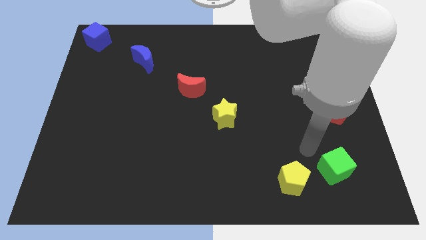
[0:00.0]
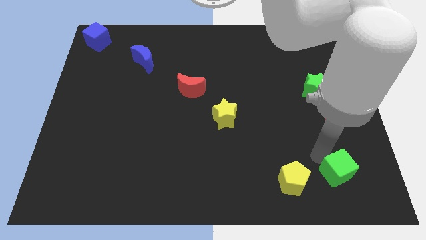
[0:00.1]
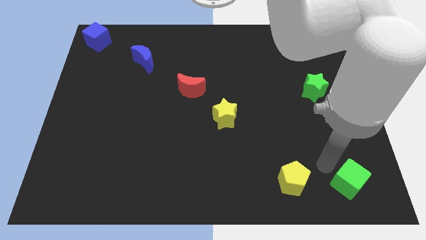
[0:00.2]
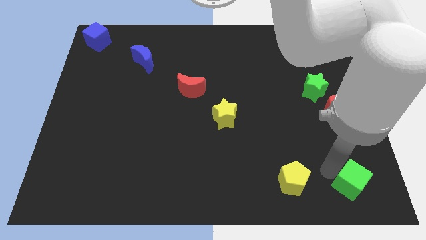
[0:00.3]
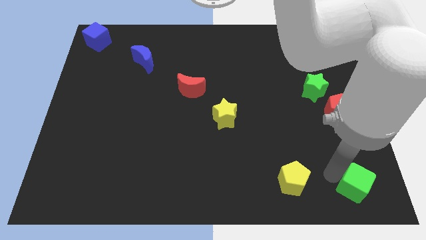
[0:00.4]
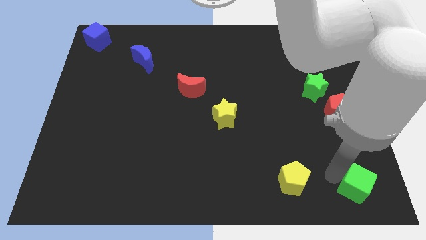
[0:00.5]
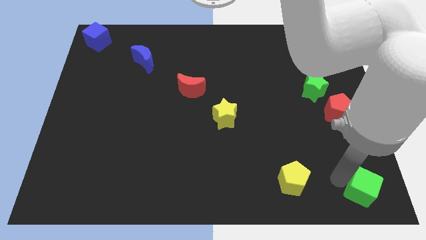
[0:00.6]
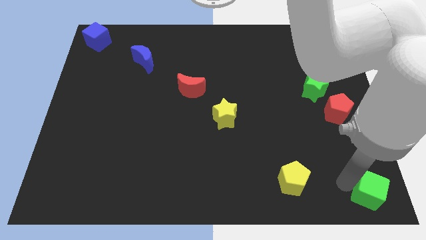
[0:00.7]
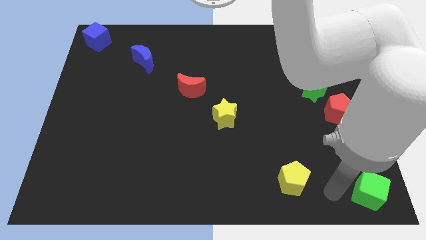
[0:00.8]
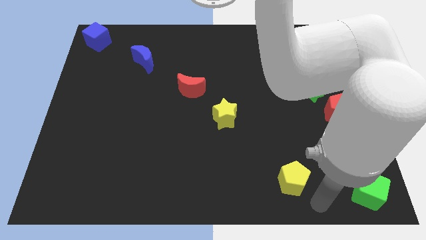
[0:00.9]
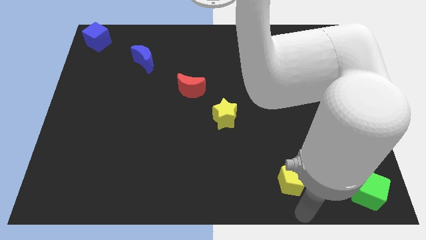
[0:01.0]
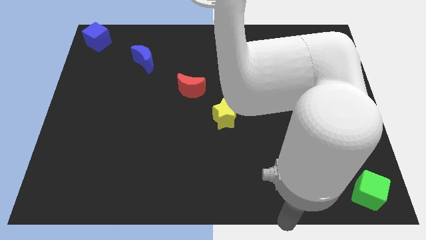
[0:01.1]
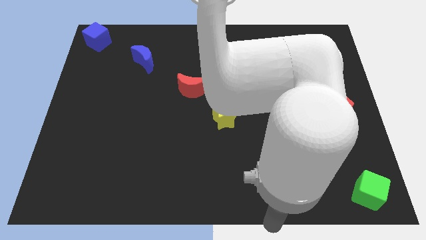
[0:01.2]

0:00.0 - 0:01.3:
move green cube towards right bottom corner of the board

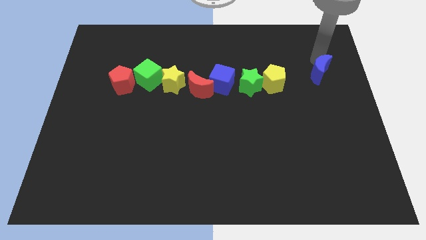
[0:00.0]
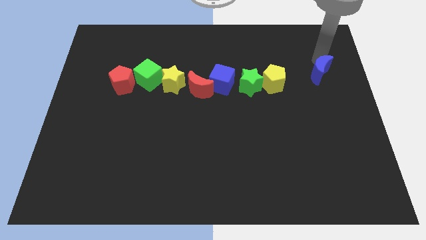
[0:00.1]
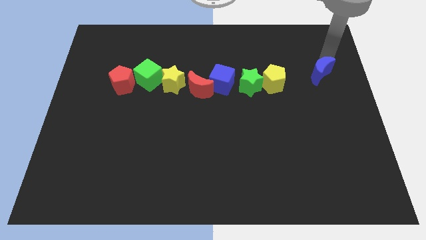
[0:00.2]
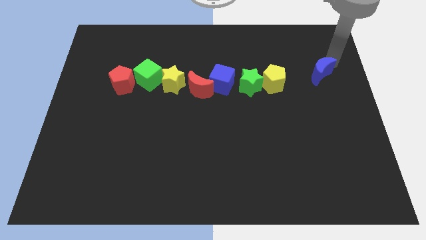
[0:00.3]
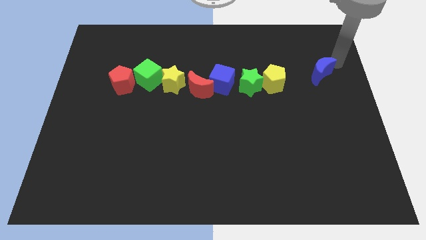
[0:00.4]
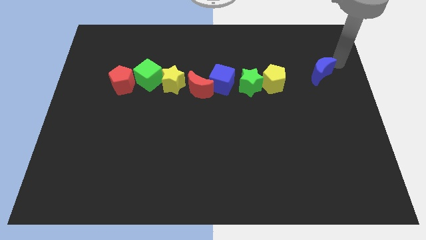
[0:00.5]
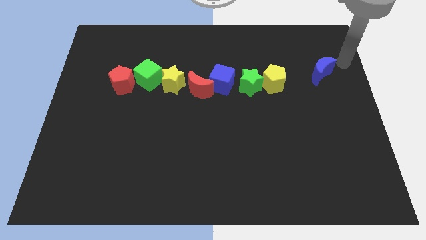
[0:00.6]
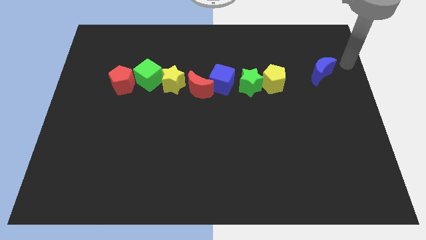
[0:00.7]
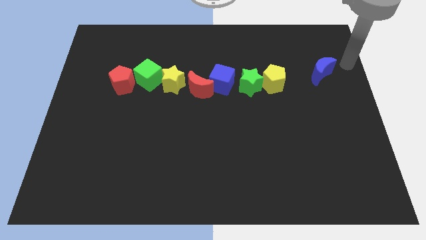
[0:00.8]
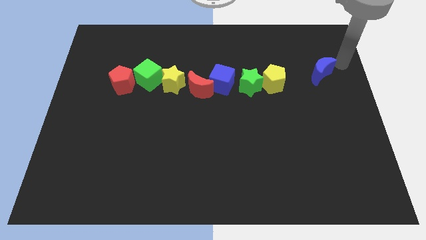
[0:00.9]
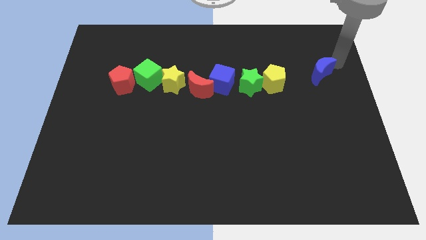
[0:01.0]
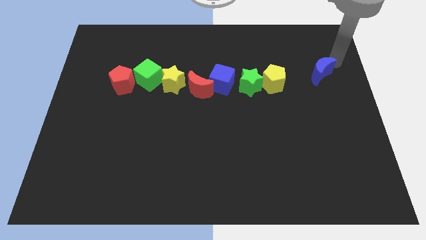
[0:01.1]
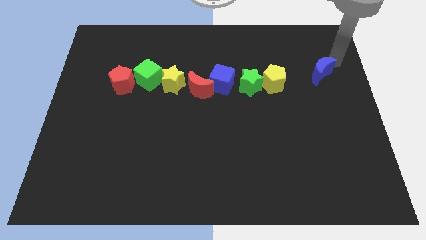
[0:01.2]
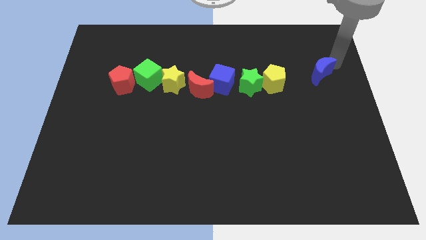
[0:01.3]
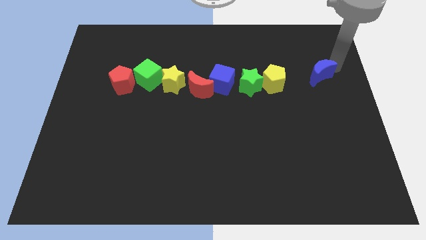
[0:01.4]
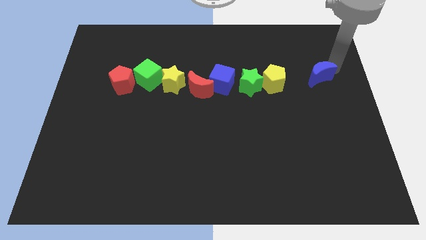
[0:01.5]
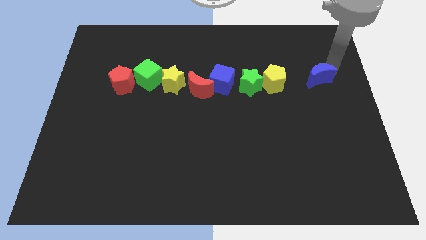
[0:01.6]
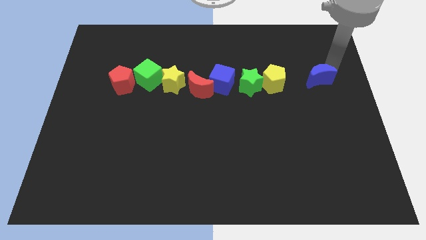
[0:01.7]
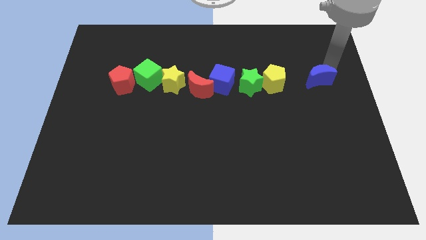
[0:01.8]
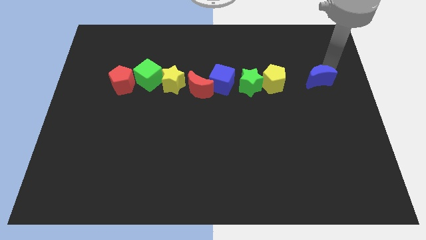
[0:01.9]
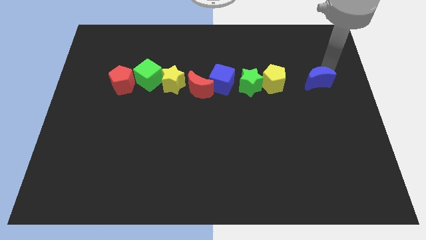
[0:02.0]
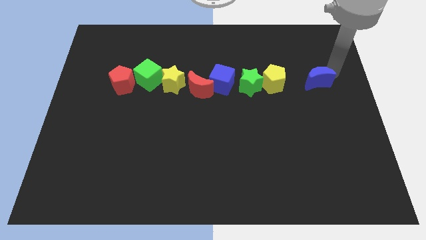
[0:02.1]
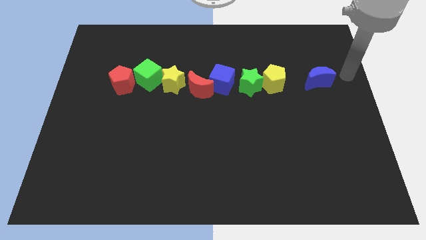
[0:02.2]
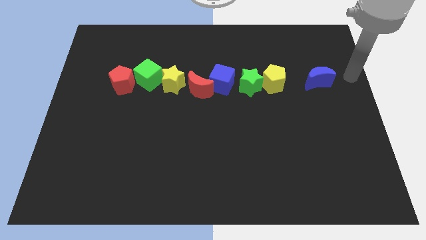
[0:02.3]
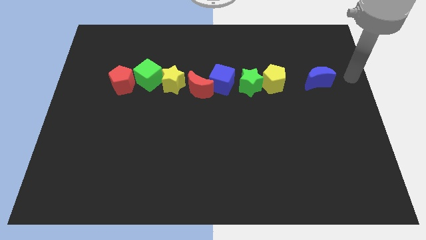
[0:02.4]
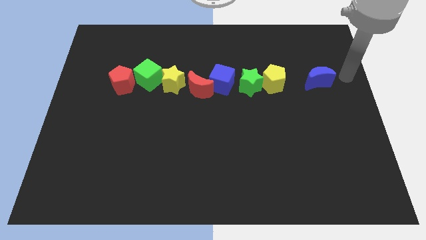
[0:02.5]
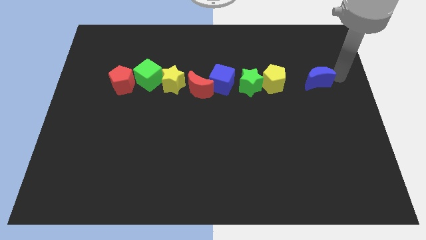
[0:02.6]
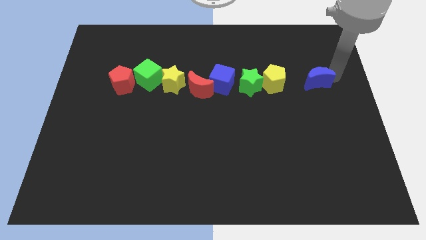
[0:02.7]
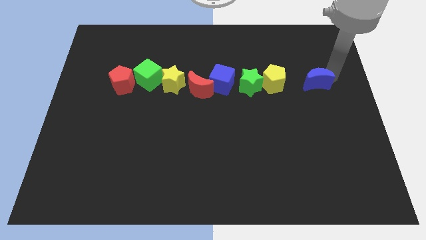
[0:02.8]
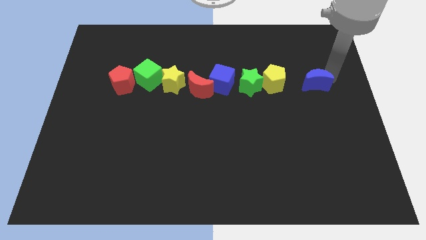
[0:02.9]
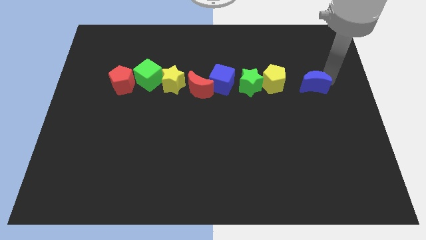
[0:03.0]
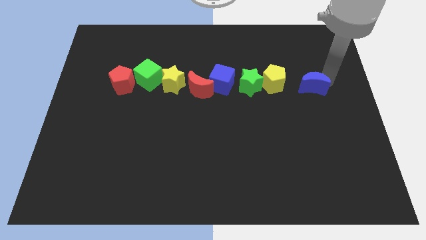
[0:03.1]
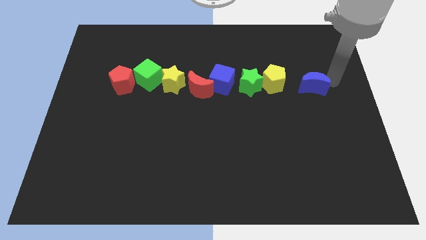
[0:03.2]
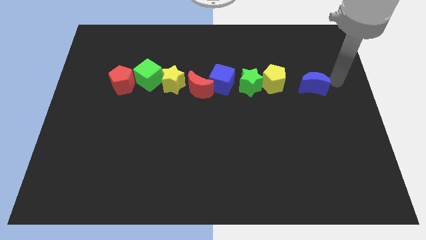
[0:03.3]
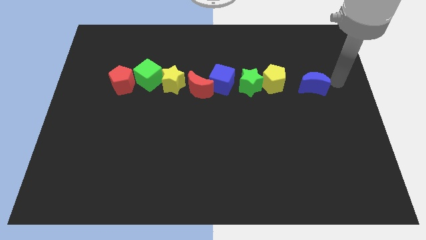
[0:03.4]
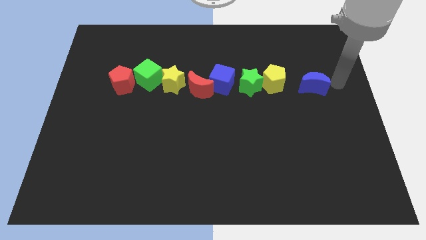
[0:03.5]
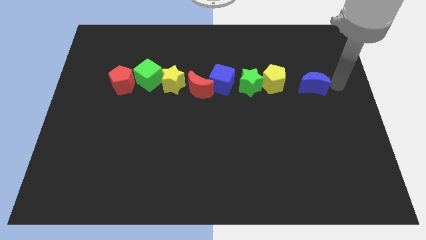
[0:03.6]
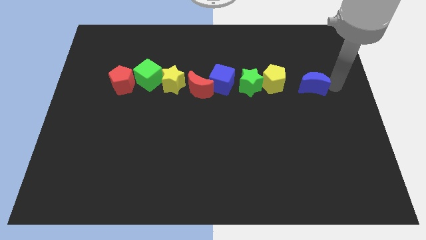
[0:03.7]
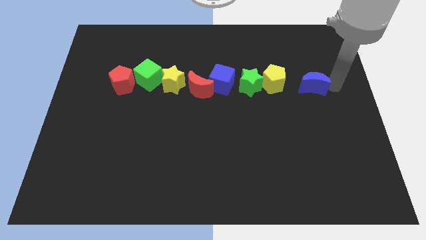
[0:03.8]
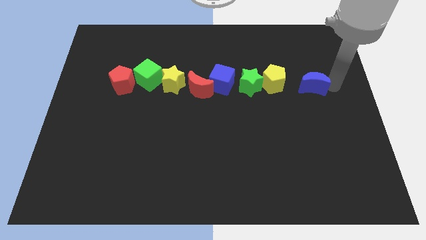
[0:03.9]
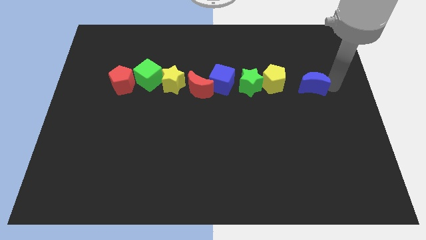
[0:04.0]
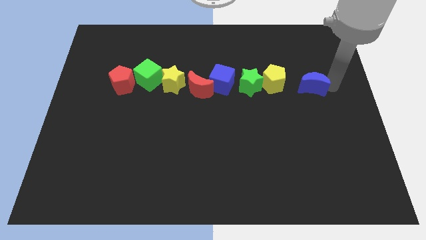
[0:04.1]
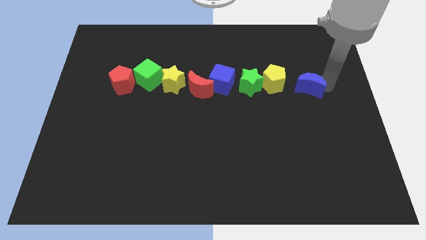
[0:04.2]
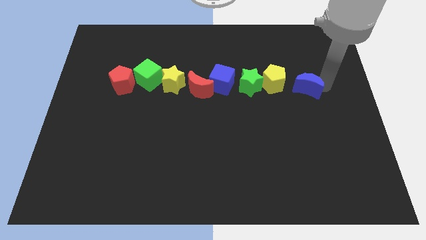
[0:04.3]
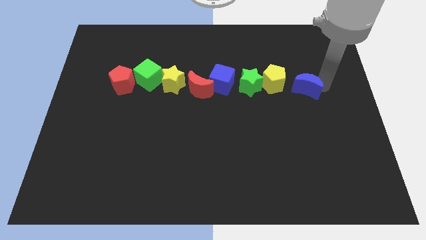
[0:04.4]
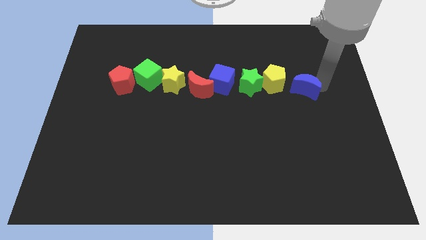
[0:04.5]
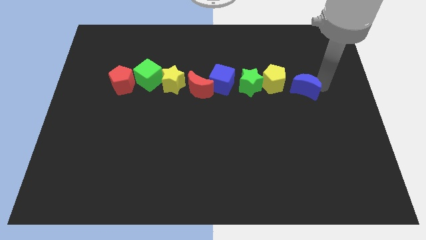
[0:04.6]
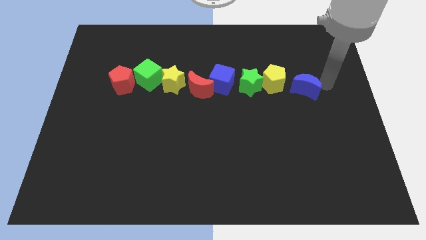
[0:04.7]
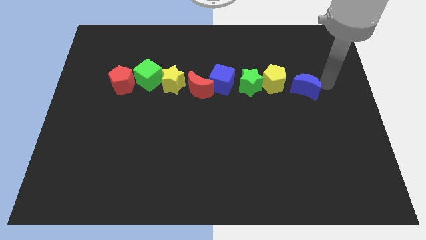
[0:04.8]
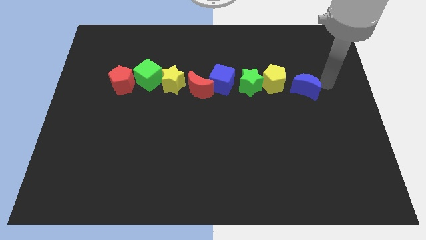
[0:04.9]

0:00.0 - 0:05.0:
place the blue moon parallel right to the yellow pentagon

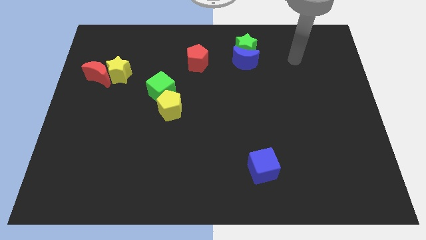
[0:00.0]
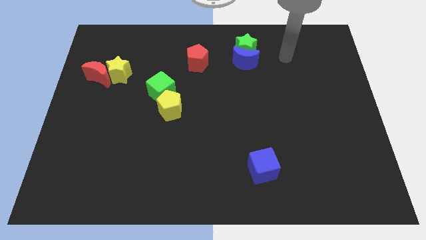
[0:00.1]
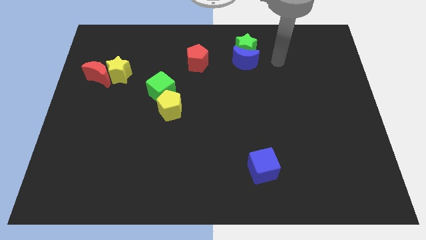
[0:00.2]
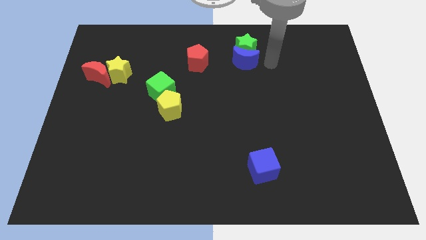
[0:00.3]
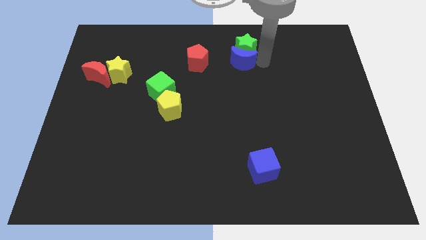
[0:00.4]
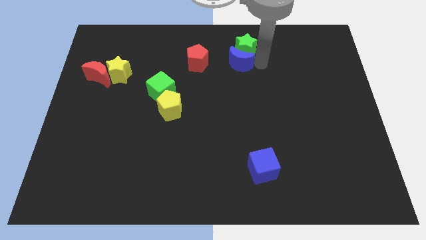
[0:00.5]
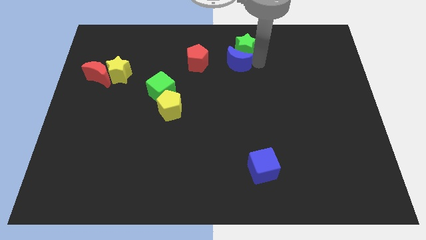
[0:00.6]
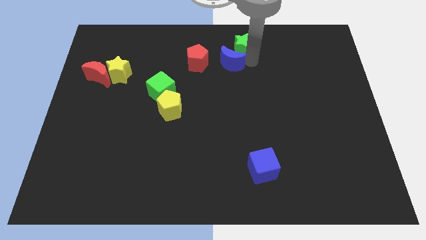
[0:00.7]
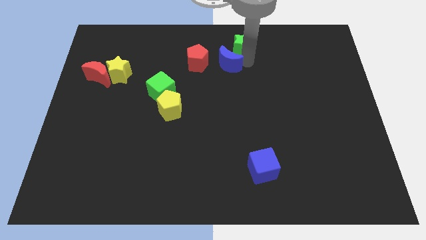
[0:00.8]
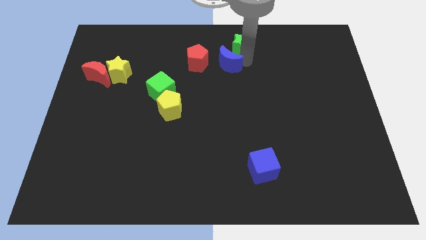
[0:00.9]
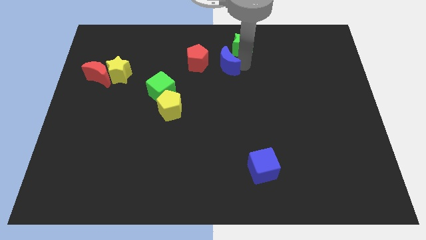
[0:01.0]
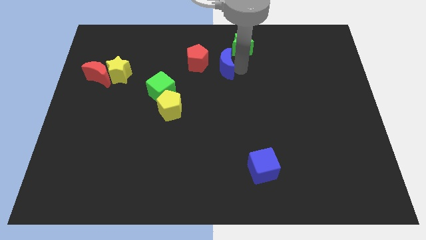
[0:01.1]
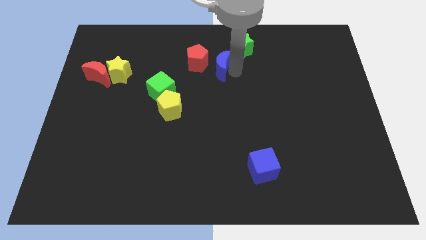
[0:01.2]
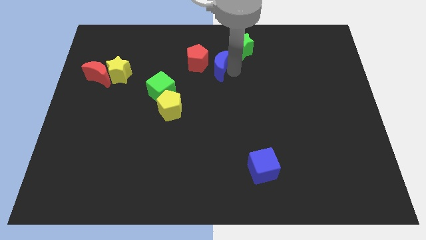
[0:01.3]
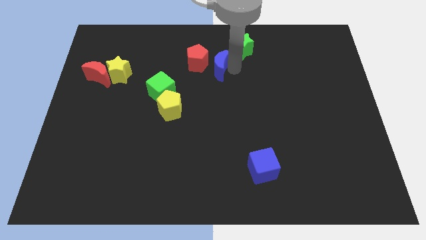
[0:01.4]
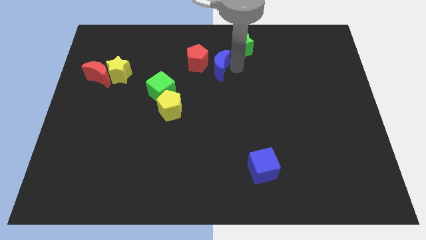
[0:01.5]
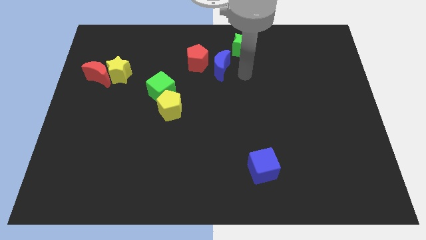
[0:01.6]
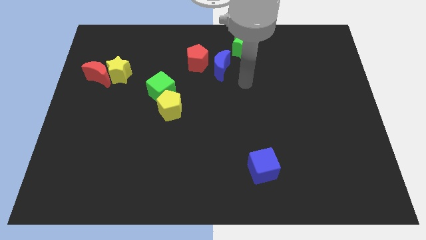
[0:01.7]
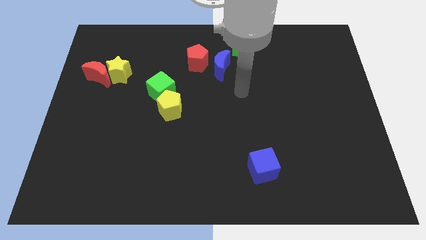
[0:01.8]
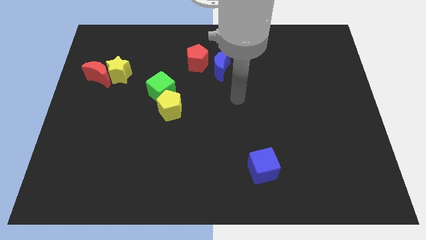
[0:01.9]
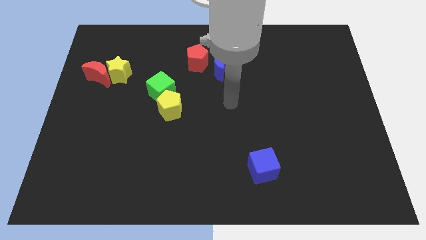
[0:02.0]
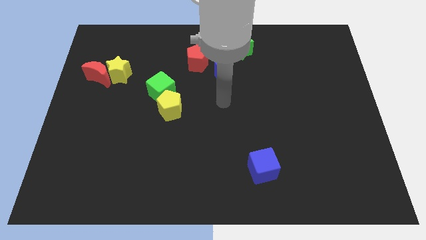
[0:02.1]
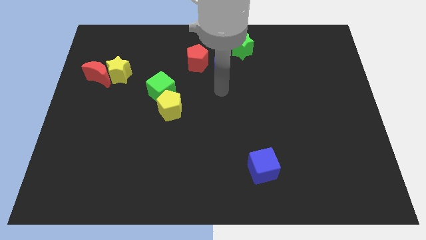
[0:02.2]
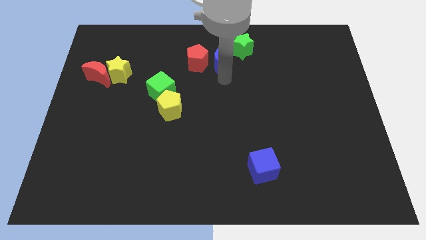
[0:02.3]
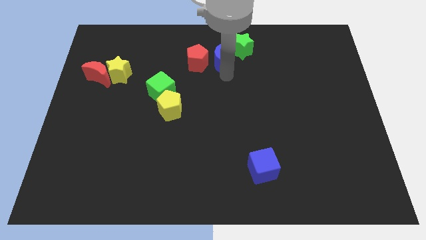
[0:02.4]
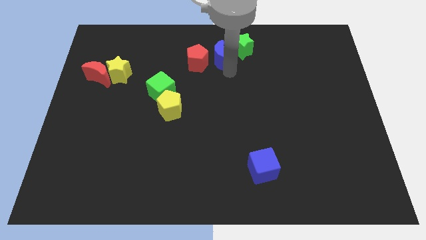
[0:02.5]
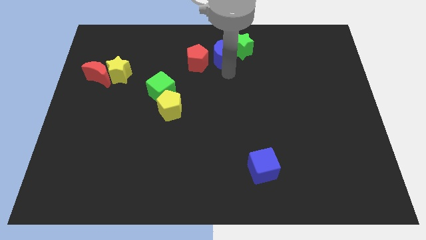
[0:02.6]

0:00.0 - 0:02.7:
move the blue moon right to the red pentagon
